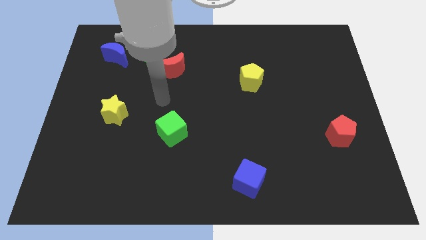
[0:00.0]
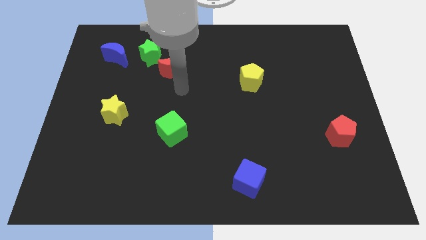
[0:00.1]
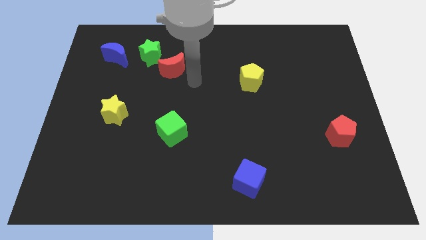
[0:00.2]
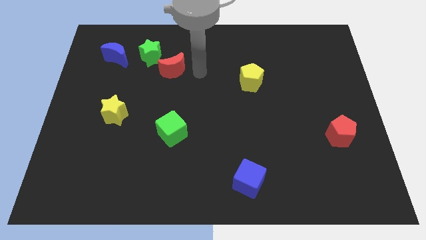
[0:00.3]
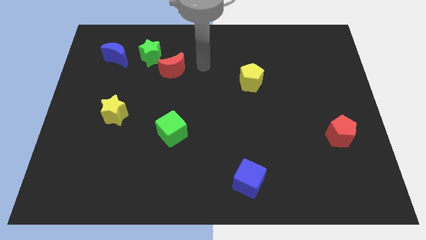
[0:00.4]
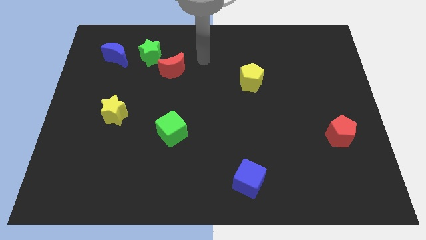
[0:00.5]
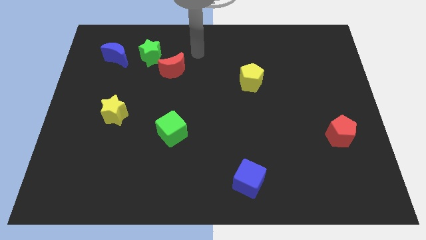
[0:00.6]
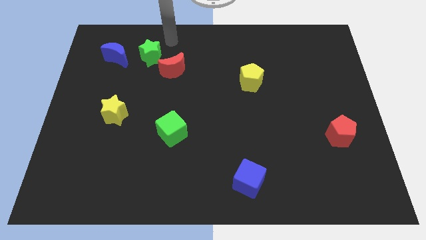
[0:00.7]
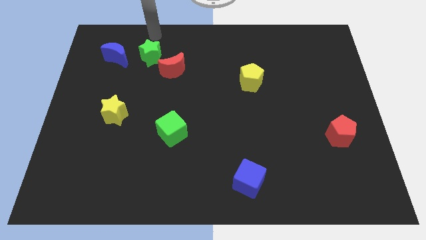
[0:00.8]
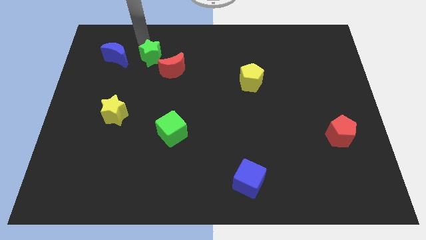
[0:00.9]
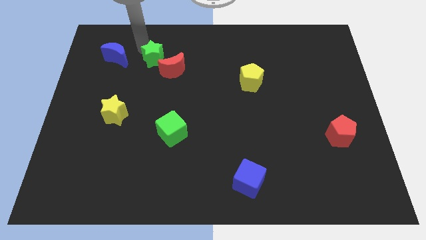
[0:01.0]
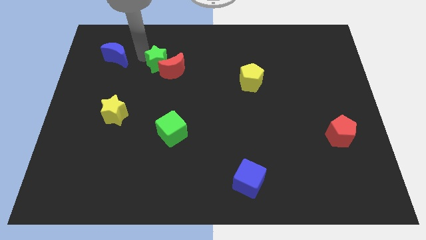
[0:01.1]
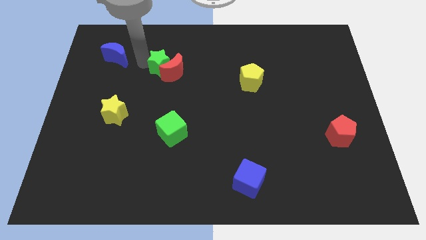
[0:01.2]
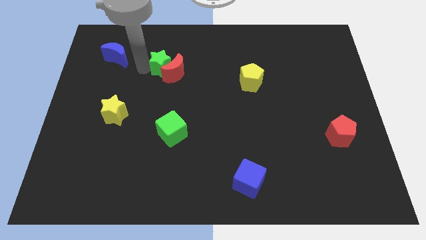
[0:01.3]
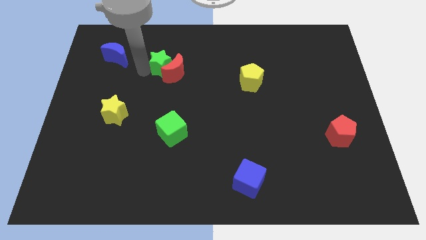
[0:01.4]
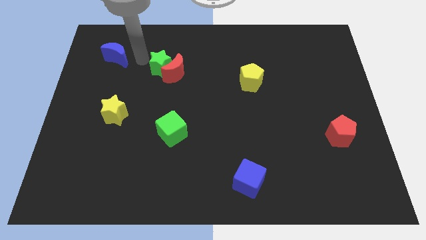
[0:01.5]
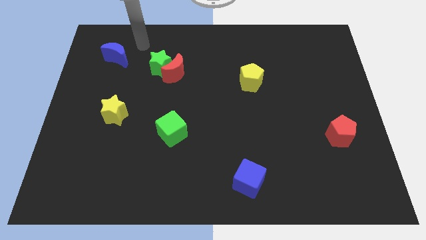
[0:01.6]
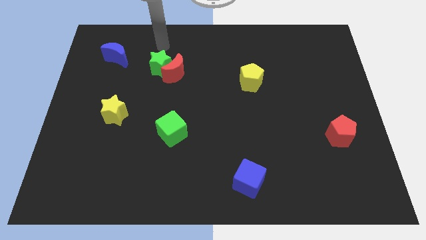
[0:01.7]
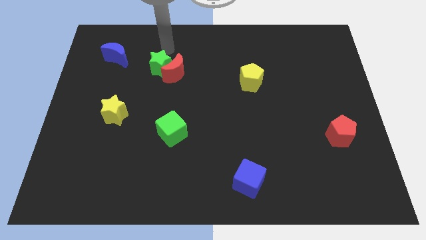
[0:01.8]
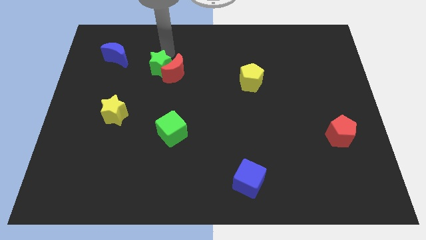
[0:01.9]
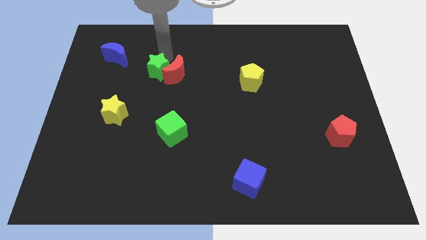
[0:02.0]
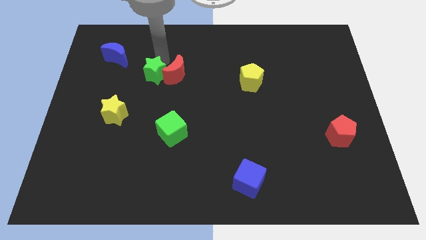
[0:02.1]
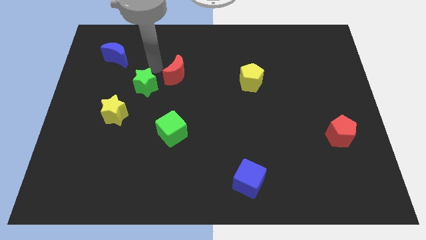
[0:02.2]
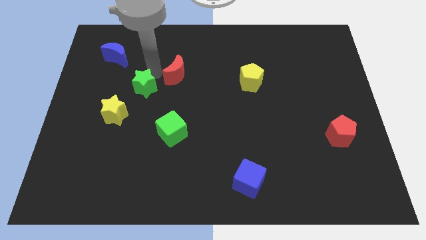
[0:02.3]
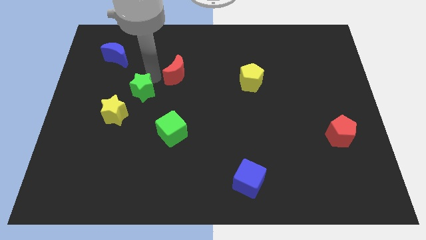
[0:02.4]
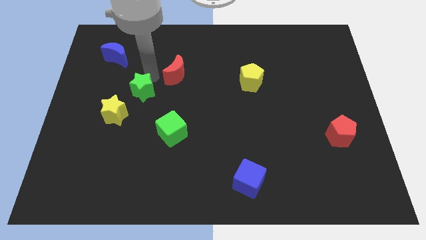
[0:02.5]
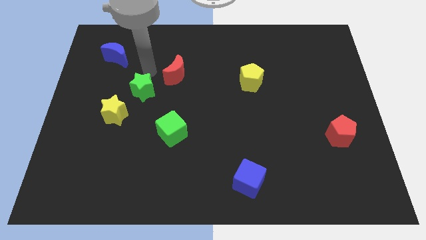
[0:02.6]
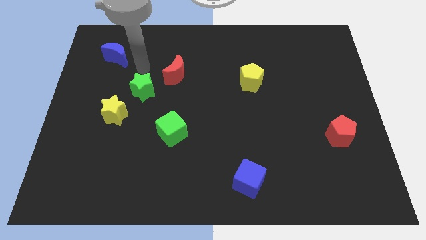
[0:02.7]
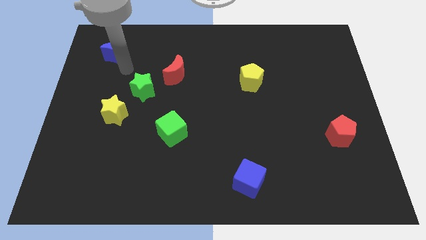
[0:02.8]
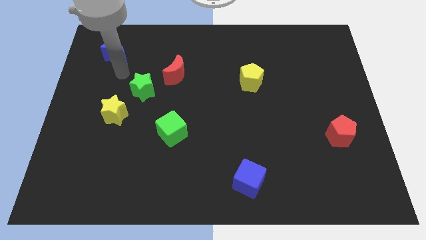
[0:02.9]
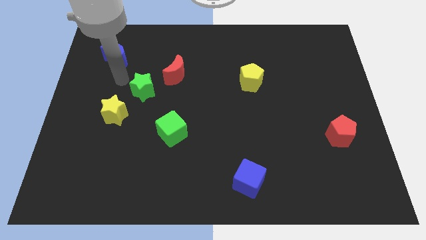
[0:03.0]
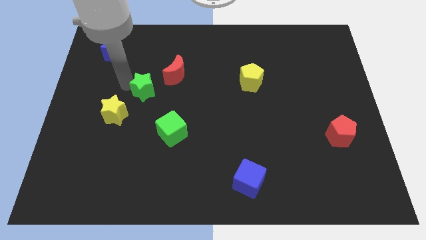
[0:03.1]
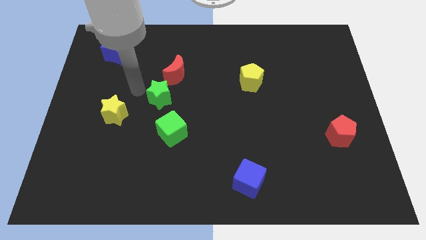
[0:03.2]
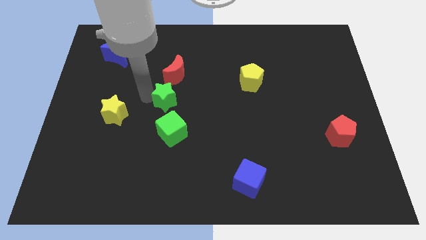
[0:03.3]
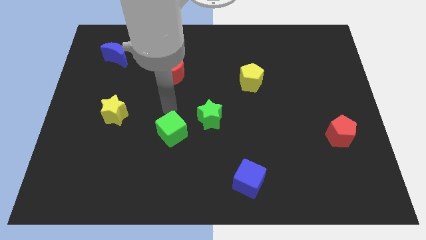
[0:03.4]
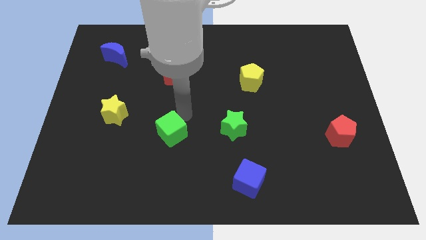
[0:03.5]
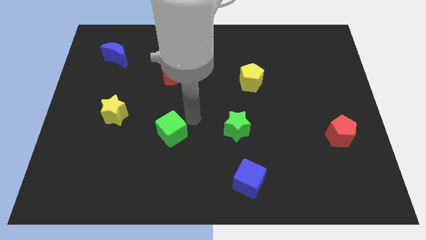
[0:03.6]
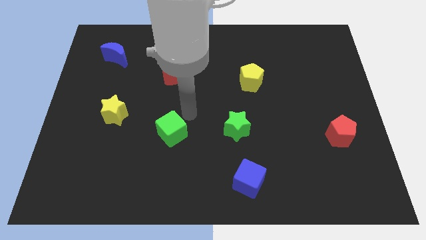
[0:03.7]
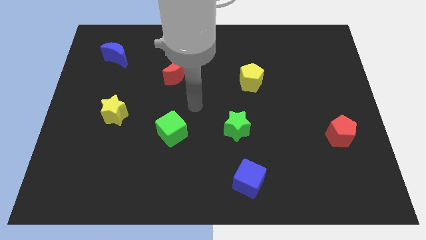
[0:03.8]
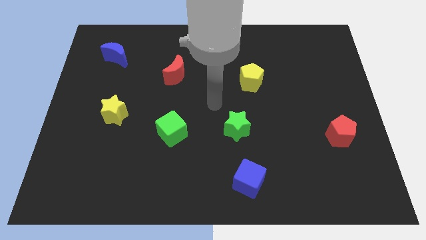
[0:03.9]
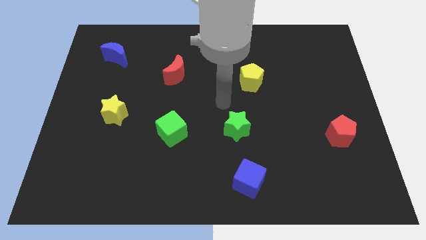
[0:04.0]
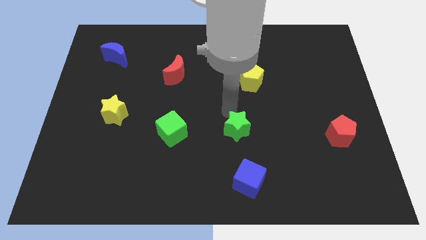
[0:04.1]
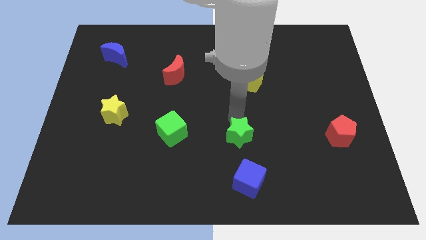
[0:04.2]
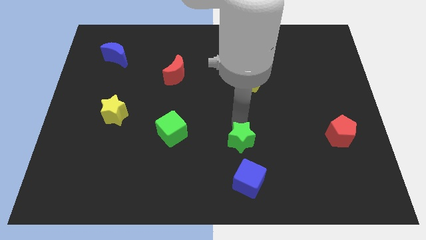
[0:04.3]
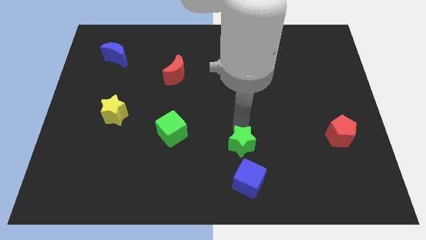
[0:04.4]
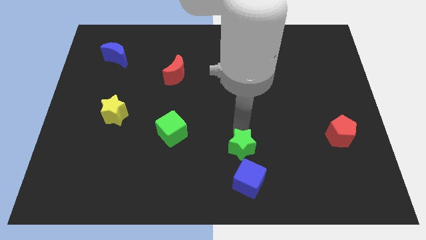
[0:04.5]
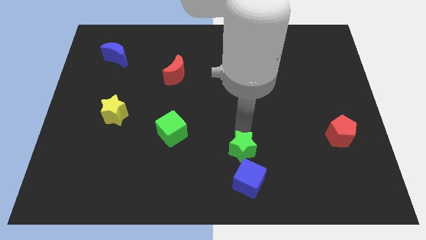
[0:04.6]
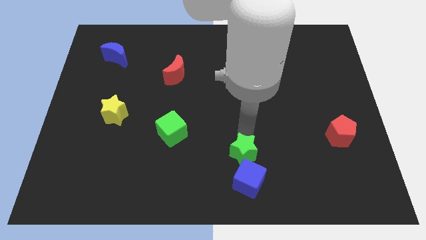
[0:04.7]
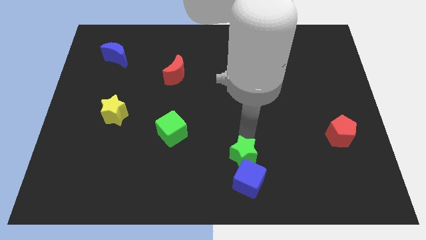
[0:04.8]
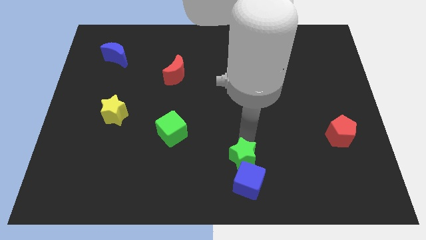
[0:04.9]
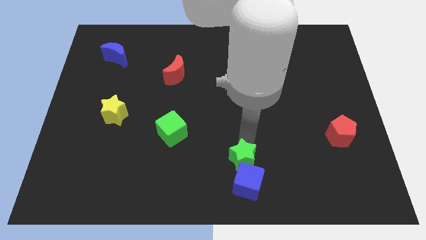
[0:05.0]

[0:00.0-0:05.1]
put the green star towards the blue cube

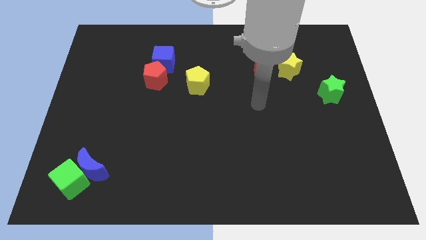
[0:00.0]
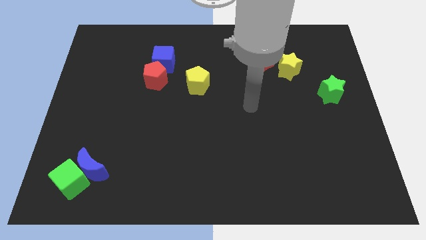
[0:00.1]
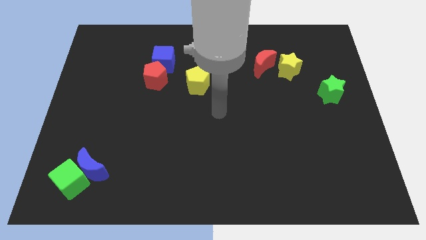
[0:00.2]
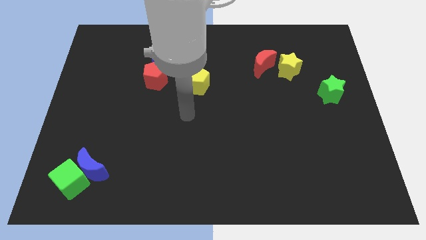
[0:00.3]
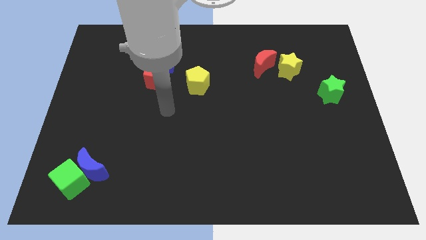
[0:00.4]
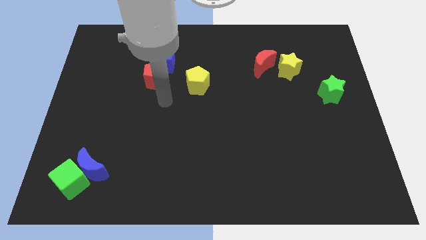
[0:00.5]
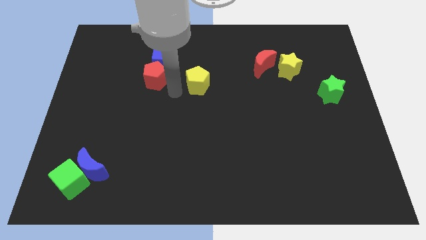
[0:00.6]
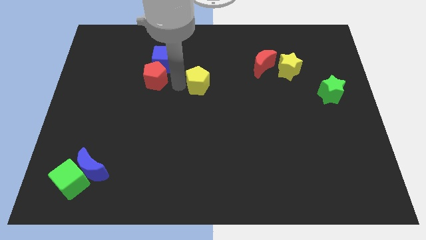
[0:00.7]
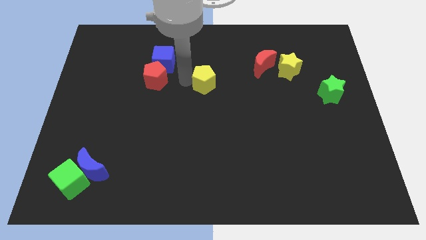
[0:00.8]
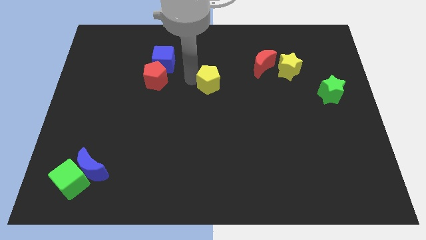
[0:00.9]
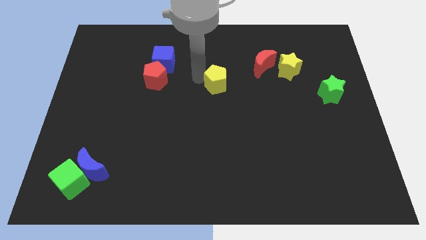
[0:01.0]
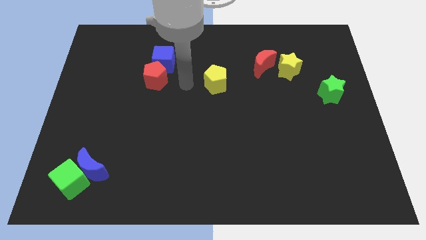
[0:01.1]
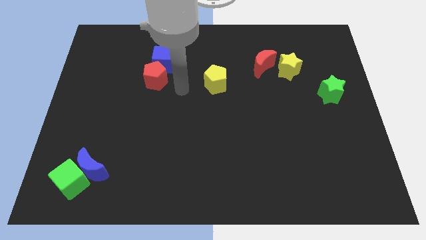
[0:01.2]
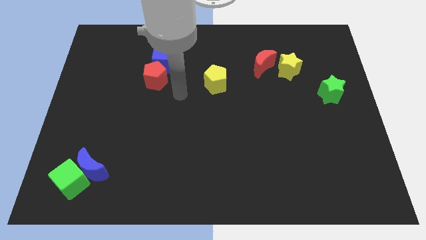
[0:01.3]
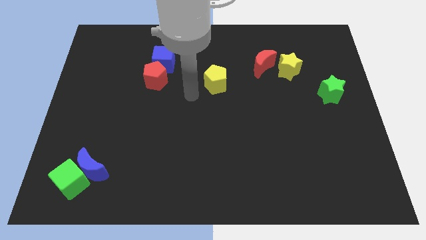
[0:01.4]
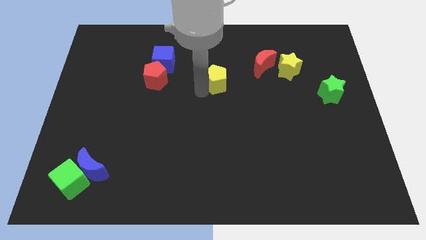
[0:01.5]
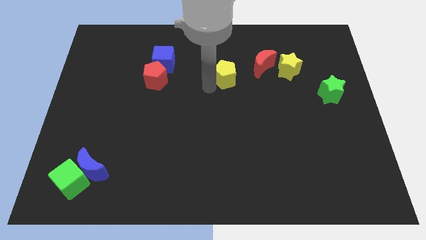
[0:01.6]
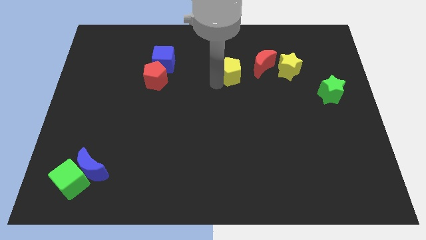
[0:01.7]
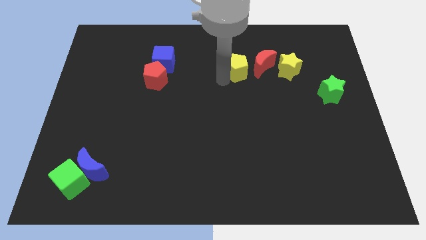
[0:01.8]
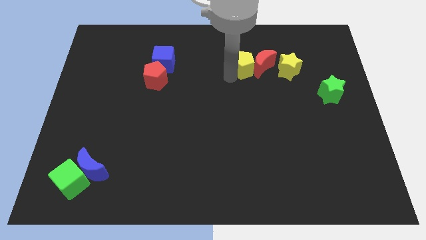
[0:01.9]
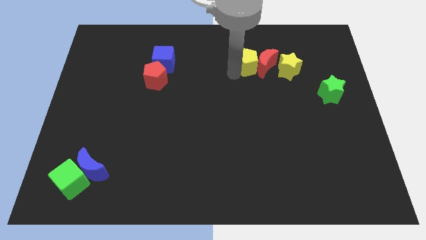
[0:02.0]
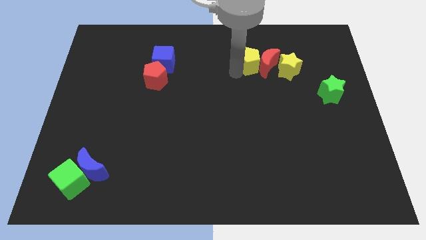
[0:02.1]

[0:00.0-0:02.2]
move the yellow pentagon close to the red moon

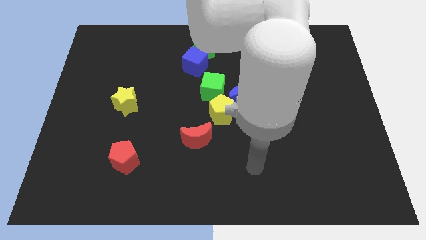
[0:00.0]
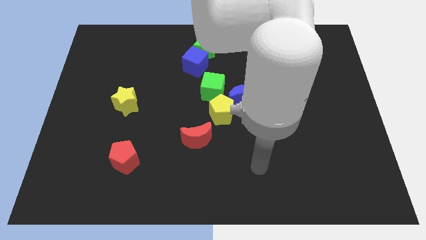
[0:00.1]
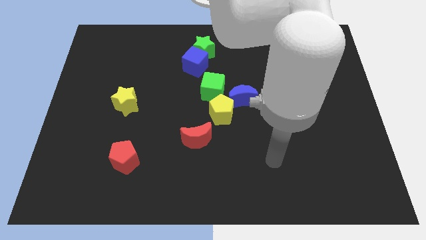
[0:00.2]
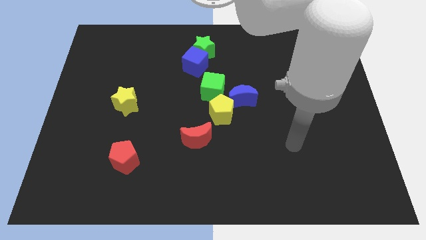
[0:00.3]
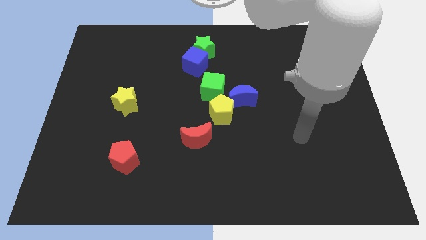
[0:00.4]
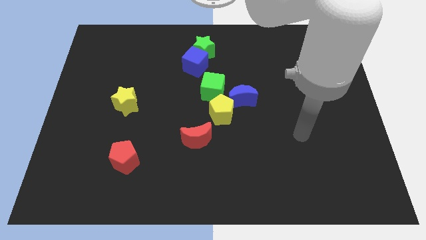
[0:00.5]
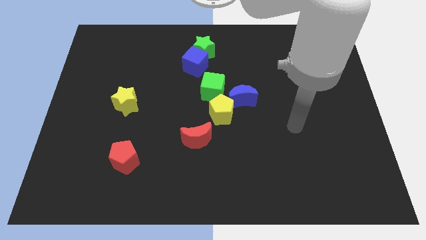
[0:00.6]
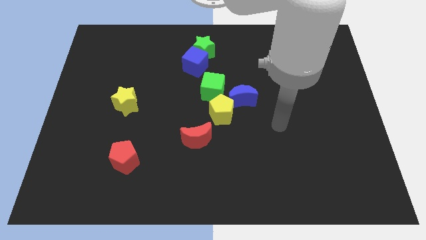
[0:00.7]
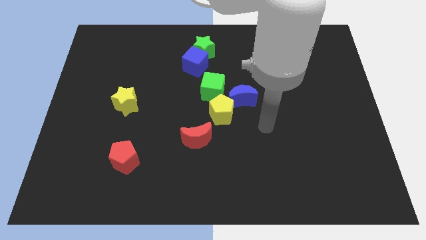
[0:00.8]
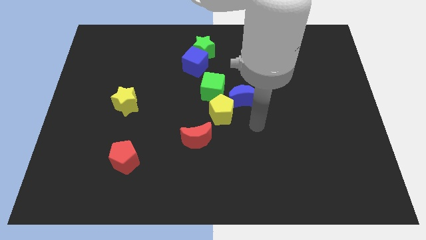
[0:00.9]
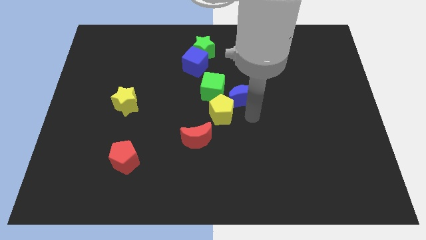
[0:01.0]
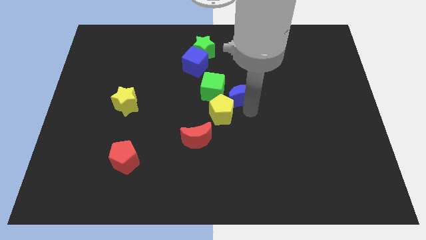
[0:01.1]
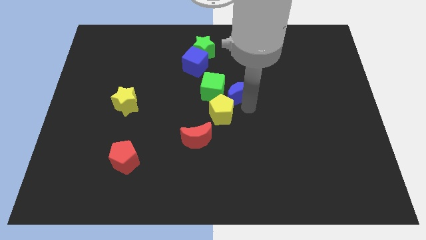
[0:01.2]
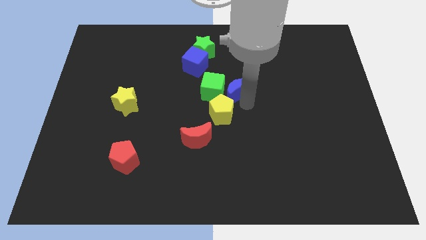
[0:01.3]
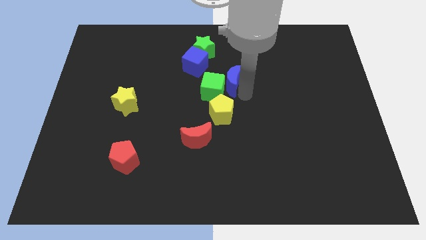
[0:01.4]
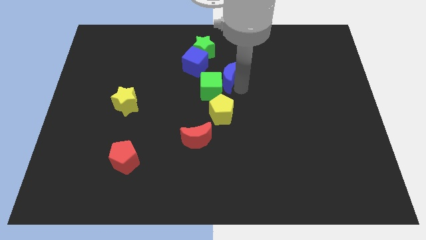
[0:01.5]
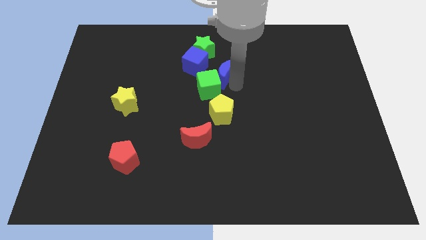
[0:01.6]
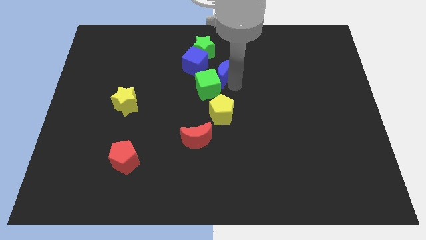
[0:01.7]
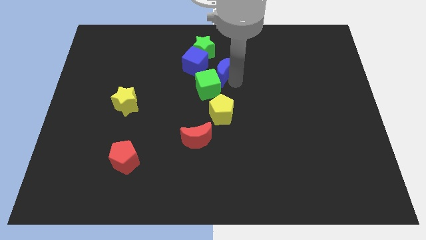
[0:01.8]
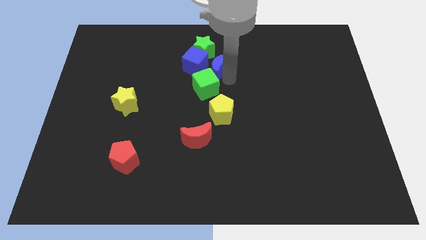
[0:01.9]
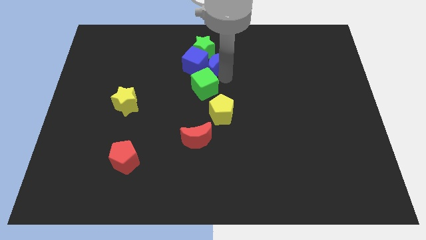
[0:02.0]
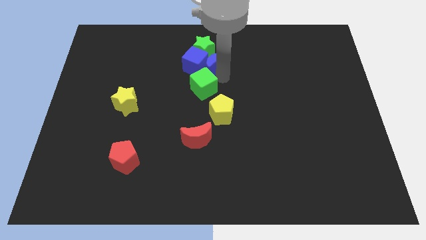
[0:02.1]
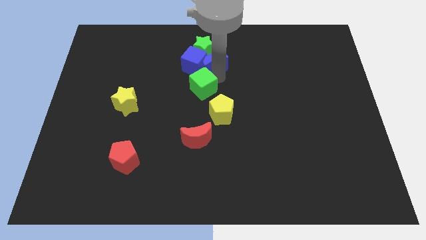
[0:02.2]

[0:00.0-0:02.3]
push the blue moon to the blue cube
